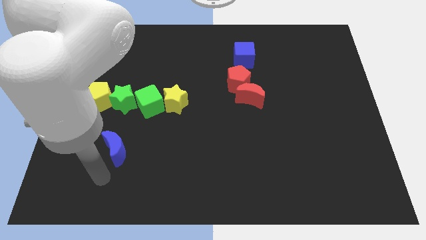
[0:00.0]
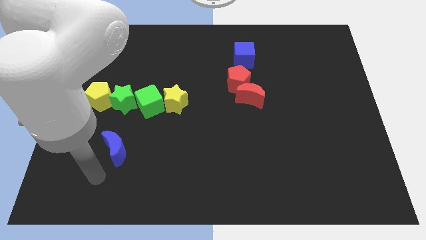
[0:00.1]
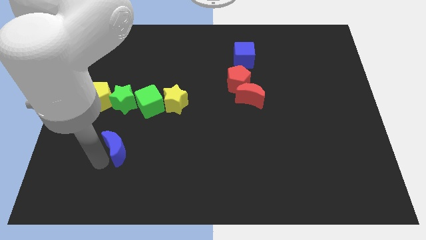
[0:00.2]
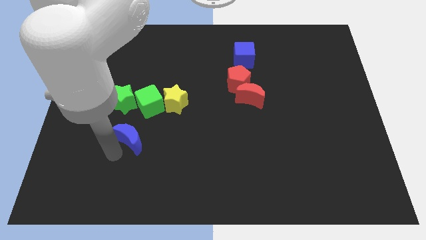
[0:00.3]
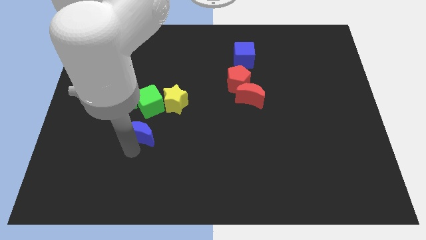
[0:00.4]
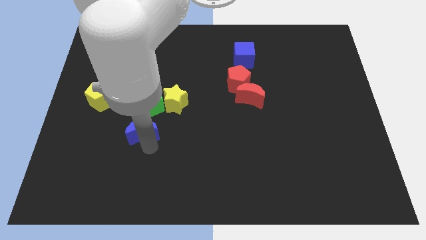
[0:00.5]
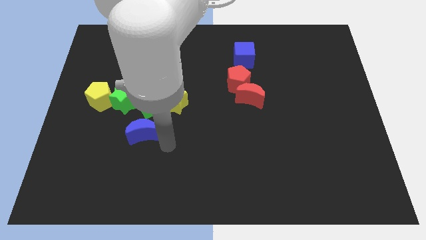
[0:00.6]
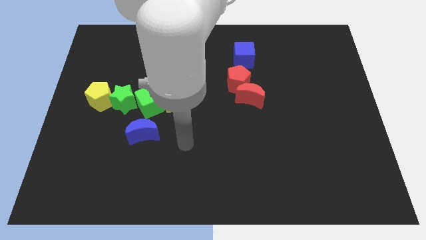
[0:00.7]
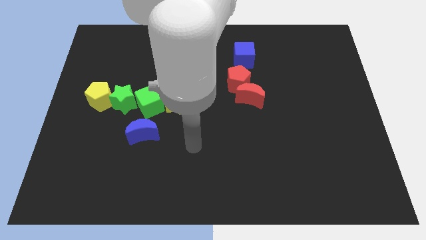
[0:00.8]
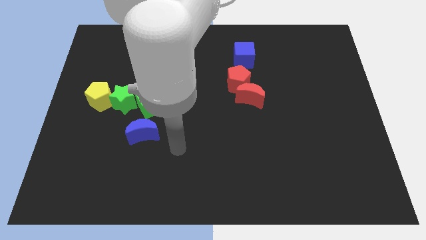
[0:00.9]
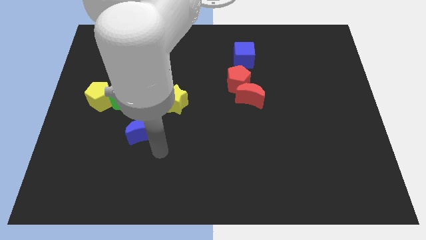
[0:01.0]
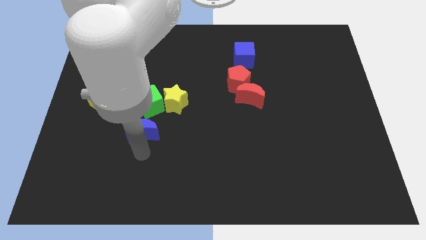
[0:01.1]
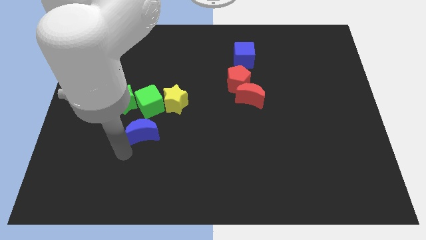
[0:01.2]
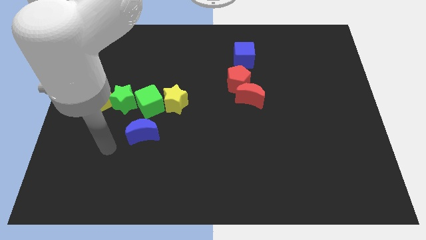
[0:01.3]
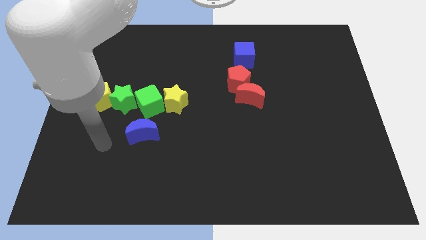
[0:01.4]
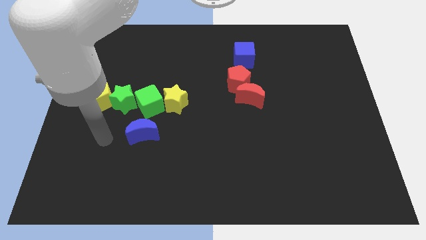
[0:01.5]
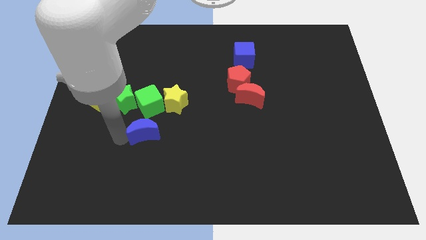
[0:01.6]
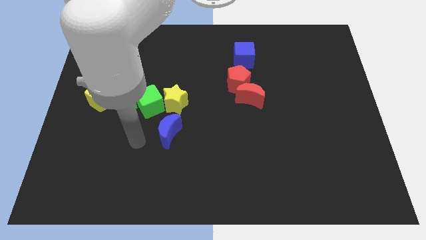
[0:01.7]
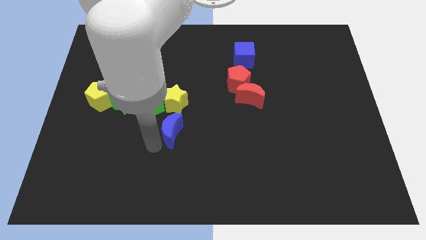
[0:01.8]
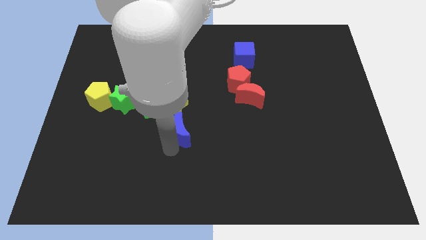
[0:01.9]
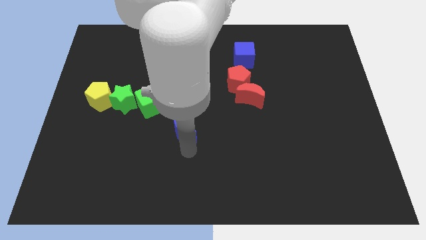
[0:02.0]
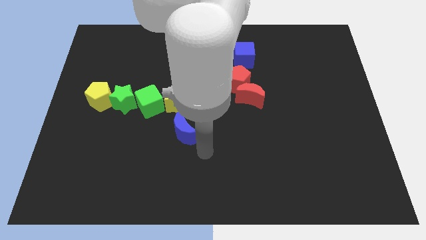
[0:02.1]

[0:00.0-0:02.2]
place blue moon below yellow star

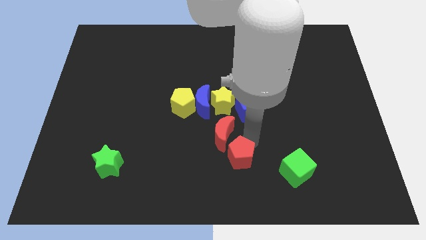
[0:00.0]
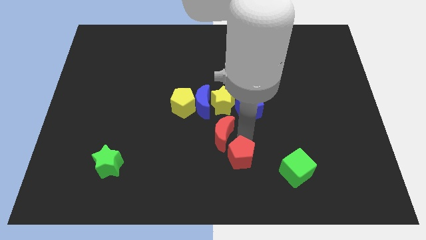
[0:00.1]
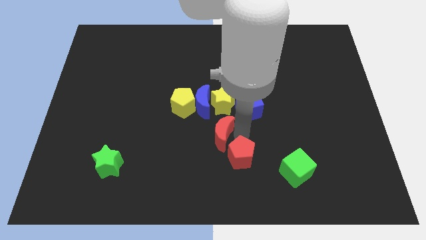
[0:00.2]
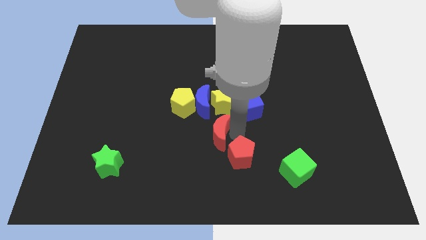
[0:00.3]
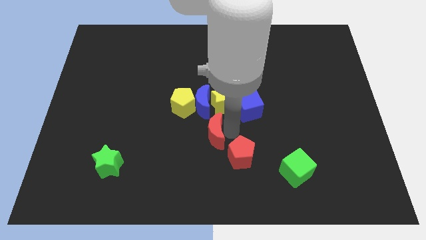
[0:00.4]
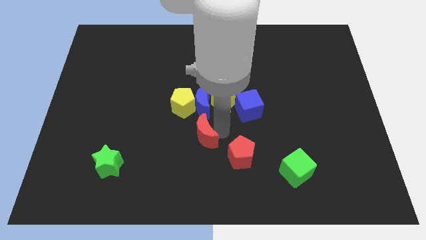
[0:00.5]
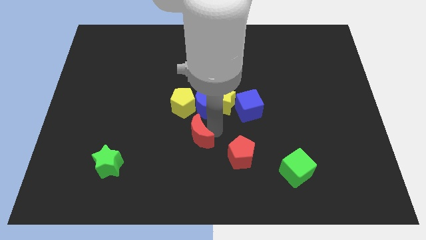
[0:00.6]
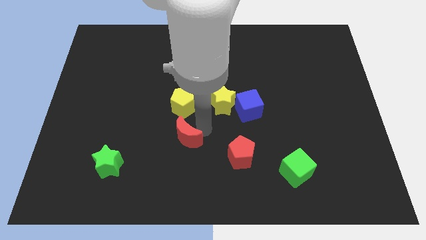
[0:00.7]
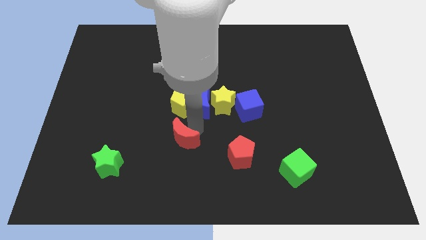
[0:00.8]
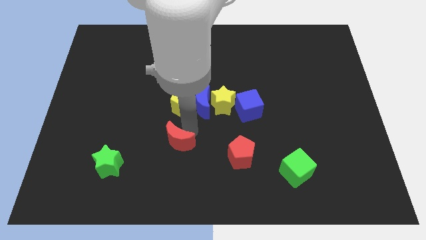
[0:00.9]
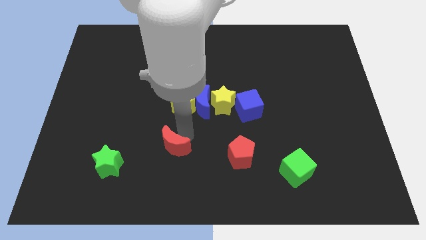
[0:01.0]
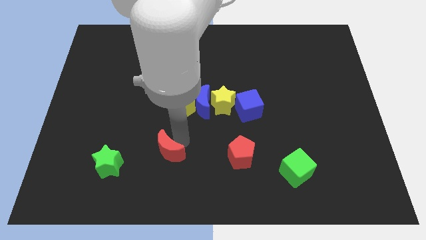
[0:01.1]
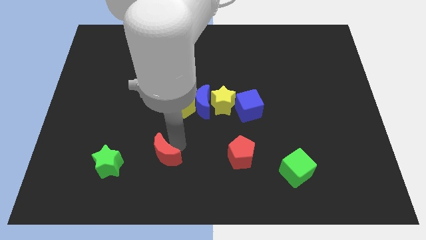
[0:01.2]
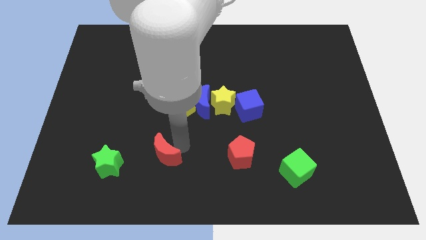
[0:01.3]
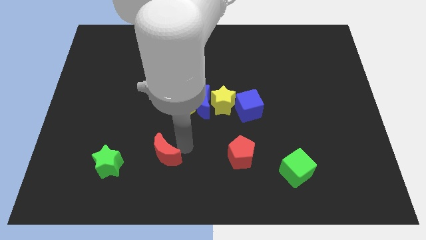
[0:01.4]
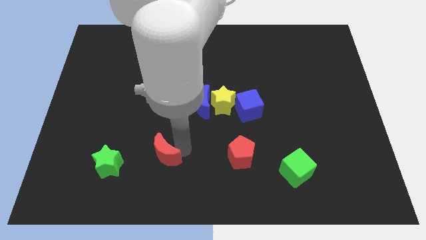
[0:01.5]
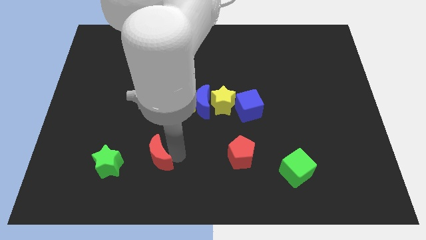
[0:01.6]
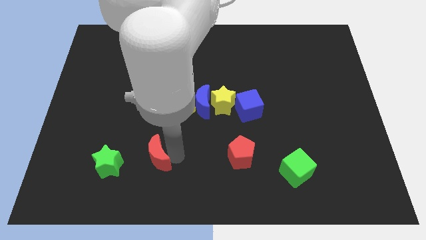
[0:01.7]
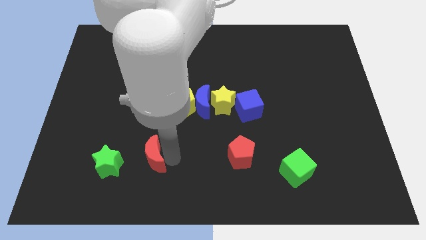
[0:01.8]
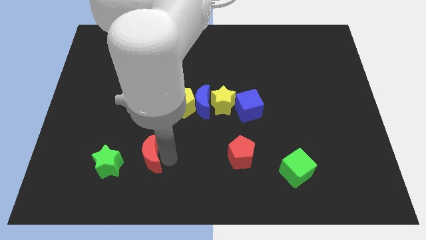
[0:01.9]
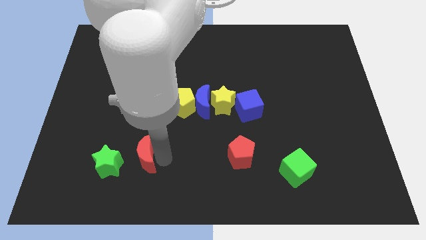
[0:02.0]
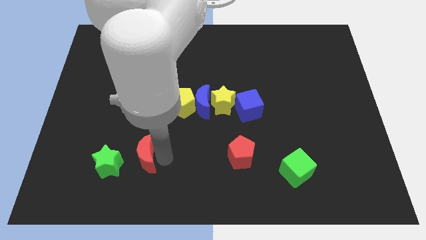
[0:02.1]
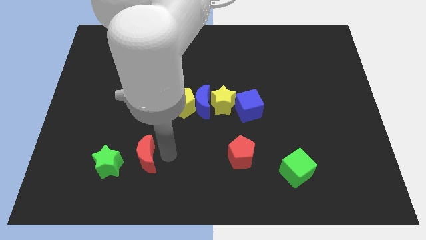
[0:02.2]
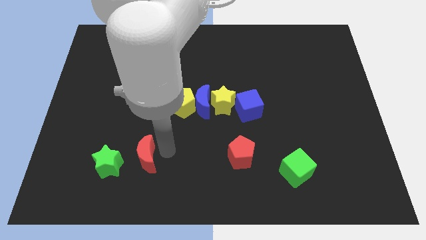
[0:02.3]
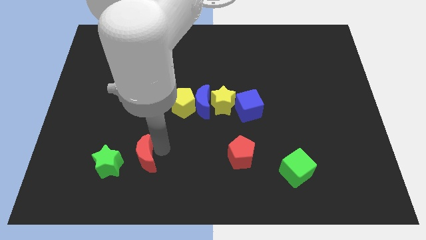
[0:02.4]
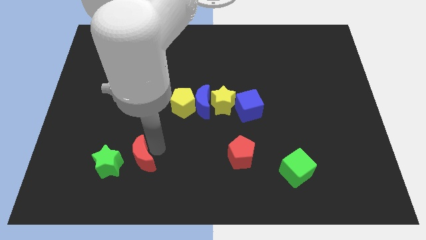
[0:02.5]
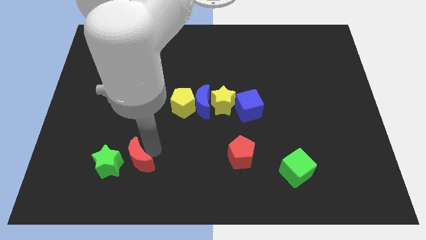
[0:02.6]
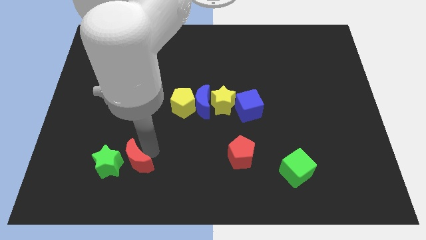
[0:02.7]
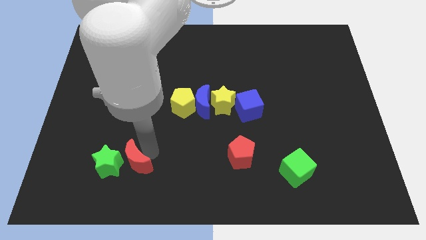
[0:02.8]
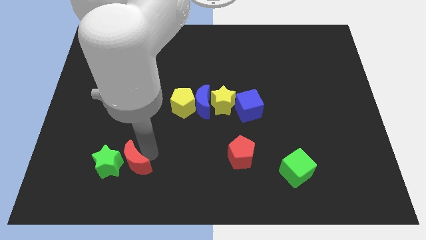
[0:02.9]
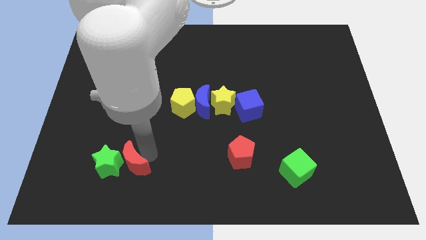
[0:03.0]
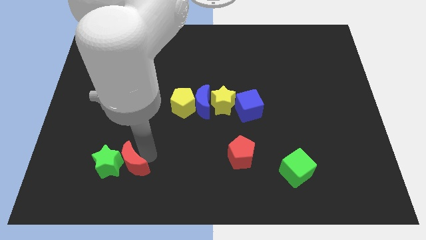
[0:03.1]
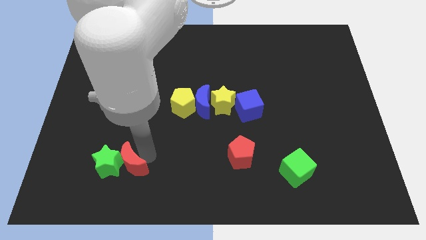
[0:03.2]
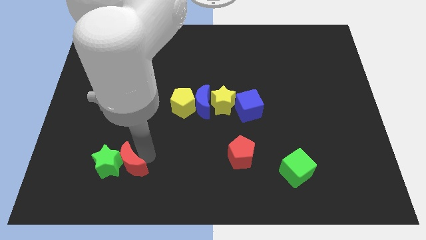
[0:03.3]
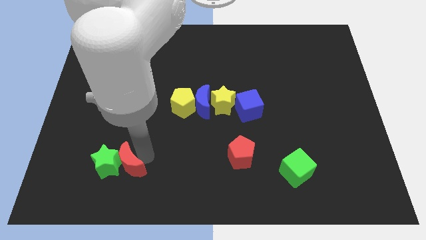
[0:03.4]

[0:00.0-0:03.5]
take the red crescent into the right side of the green star

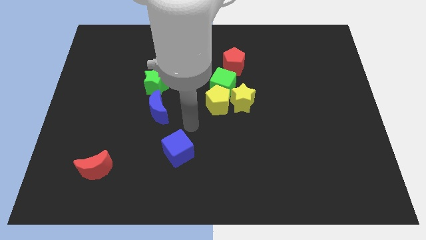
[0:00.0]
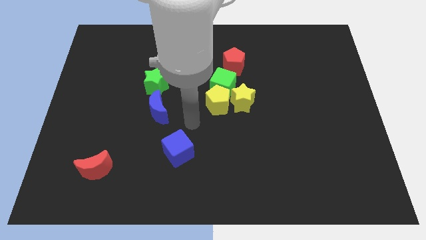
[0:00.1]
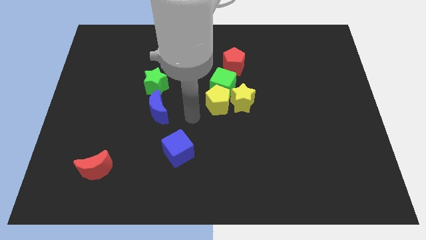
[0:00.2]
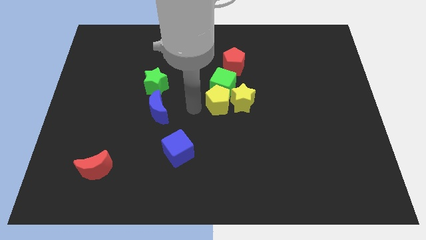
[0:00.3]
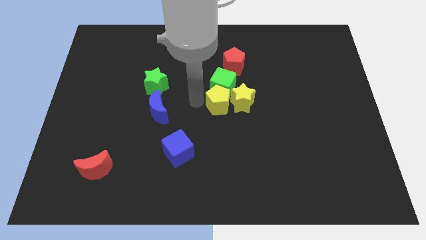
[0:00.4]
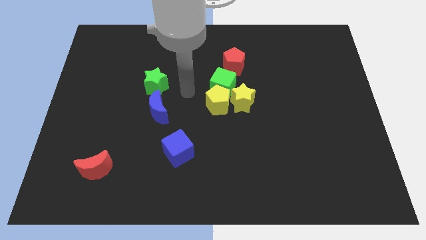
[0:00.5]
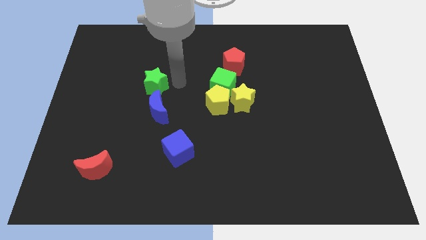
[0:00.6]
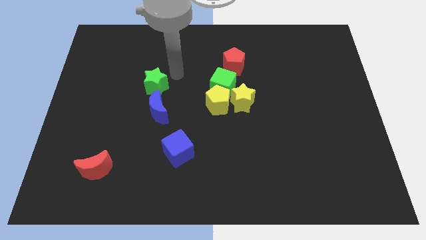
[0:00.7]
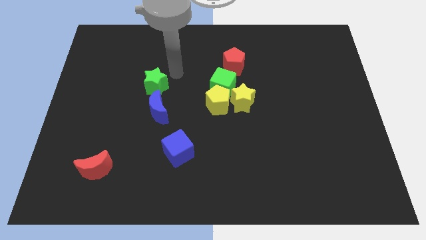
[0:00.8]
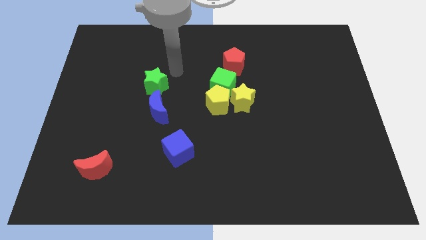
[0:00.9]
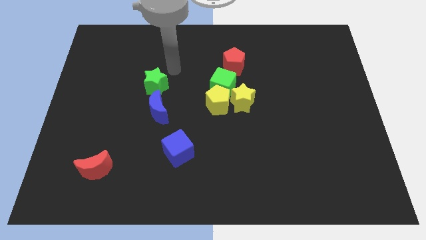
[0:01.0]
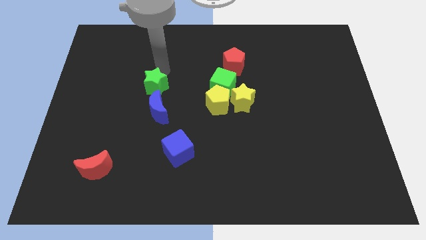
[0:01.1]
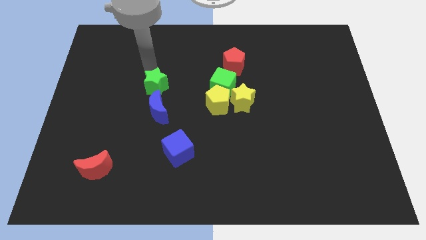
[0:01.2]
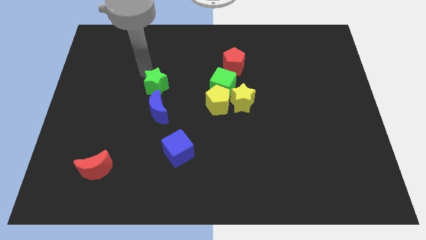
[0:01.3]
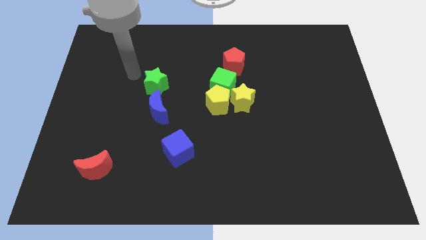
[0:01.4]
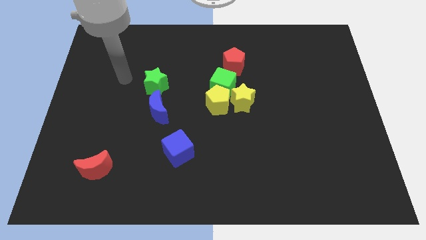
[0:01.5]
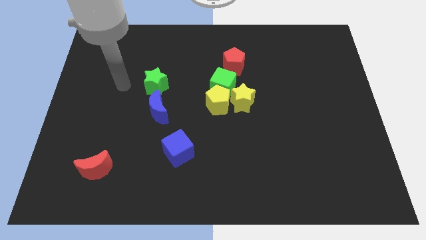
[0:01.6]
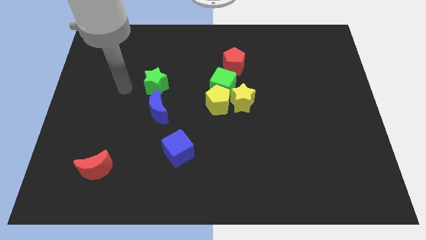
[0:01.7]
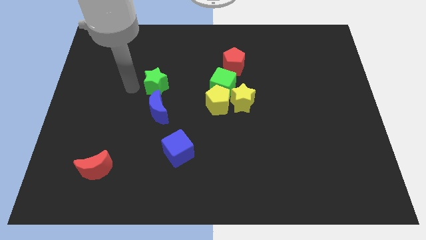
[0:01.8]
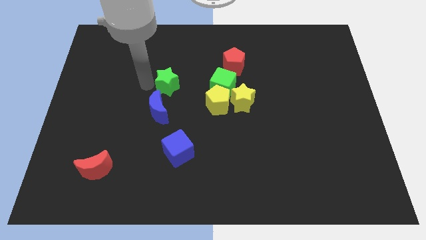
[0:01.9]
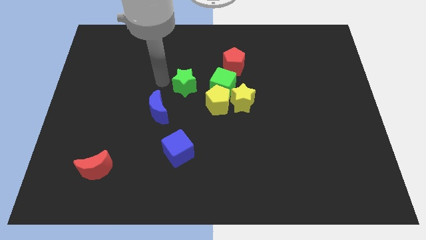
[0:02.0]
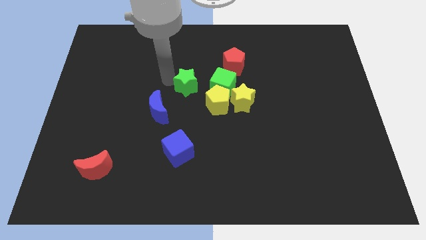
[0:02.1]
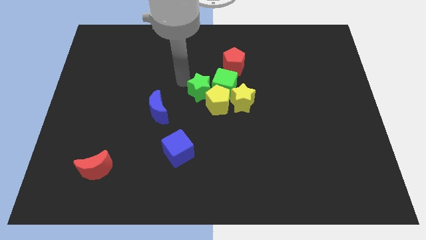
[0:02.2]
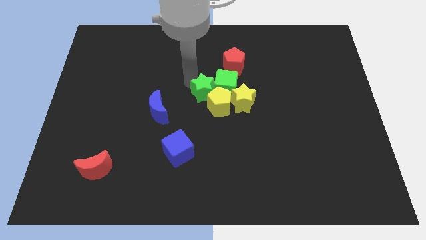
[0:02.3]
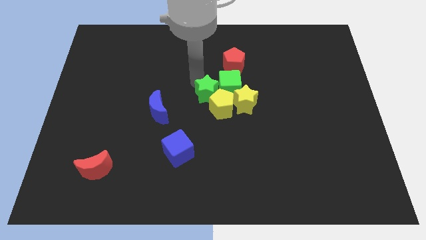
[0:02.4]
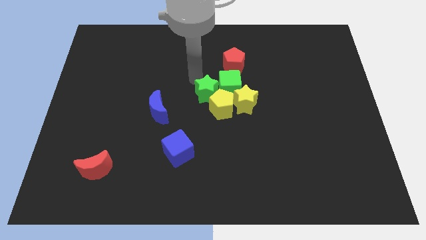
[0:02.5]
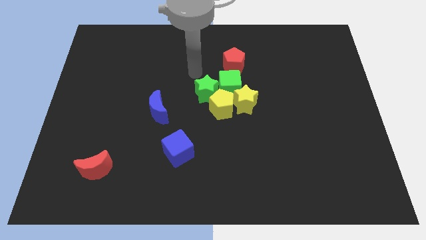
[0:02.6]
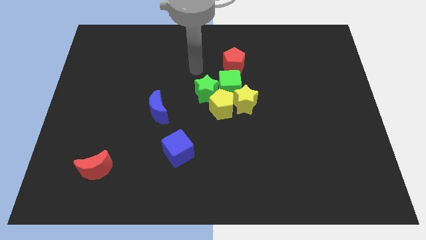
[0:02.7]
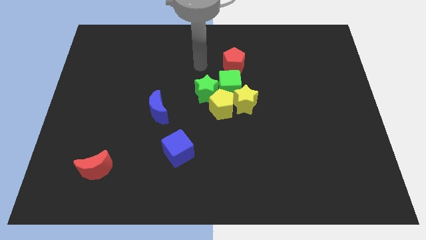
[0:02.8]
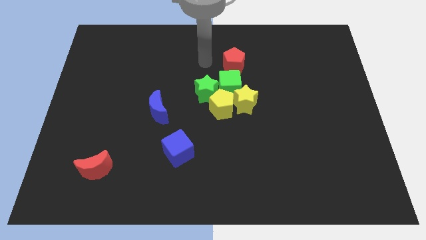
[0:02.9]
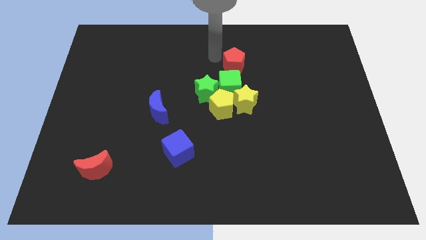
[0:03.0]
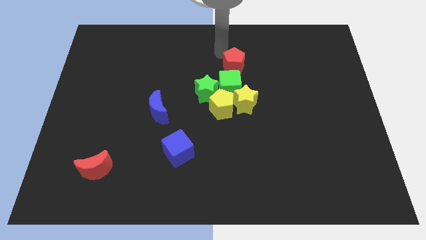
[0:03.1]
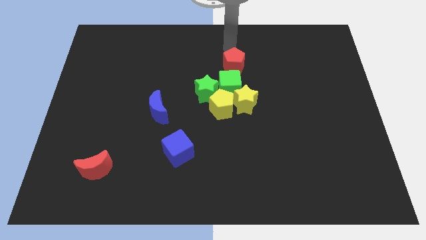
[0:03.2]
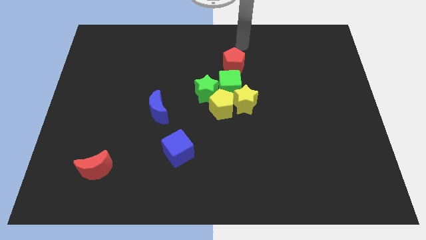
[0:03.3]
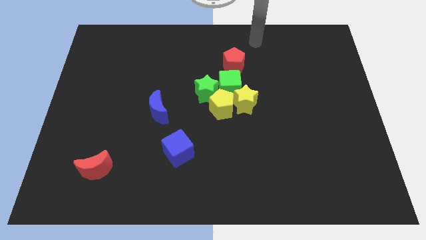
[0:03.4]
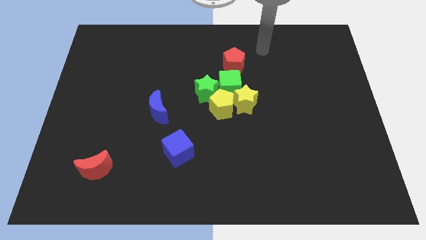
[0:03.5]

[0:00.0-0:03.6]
move the green star to the left of green cube
